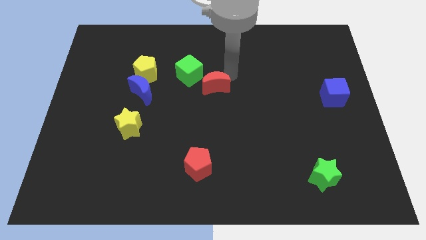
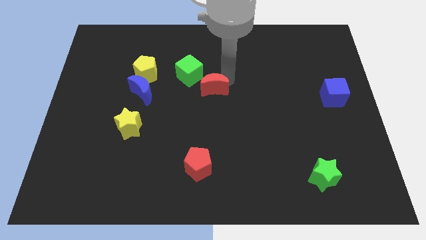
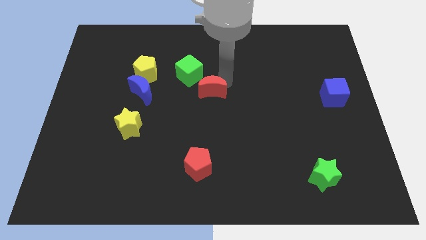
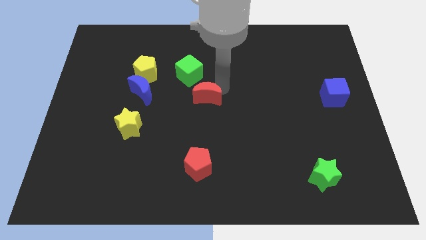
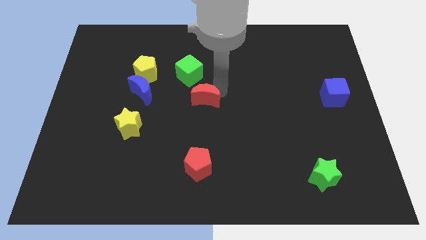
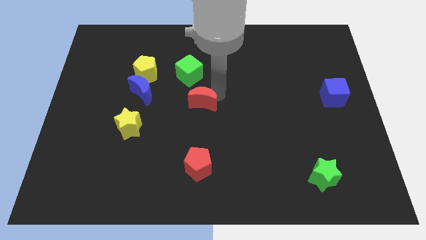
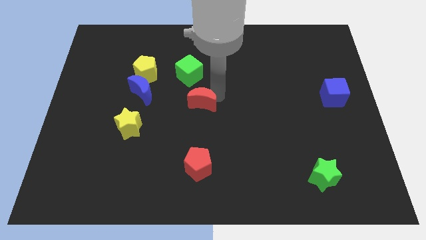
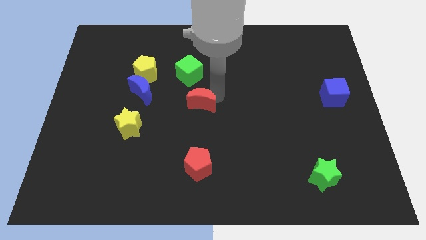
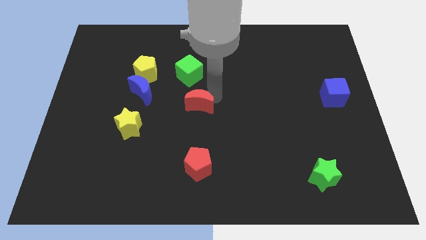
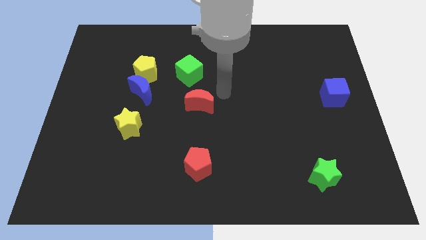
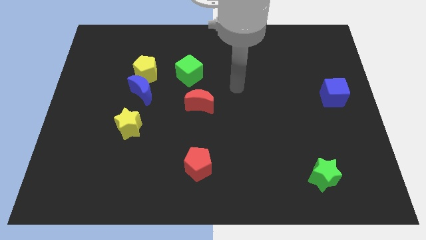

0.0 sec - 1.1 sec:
place the red moon above the red pentagon

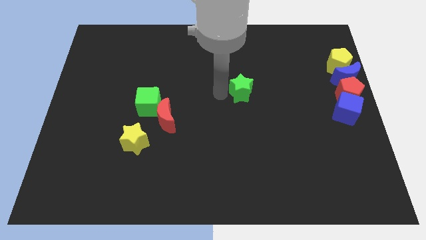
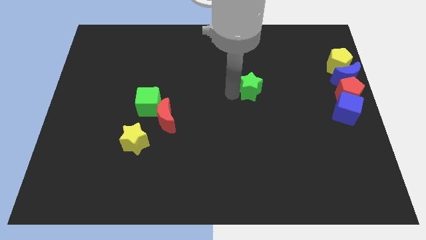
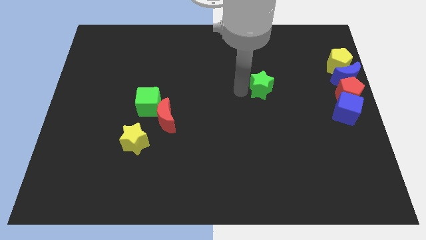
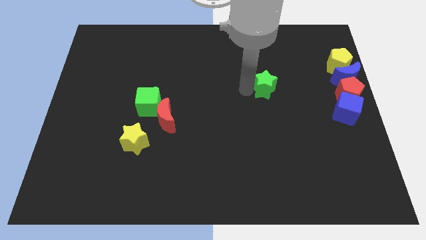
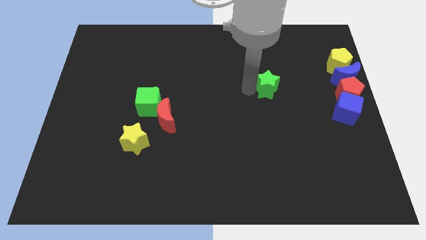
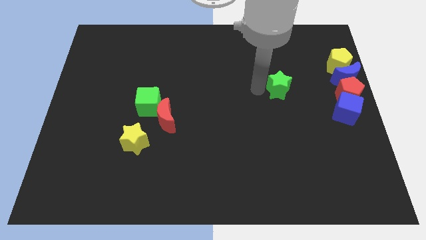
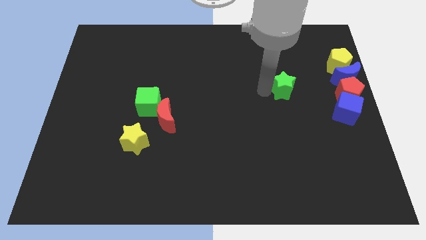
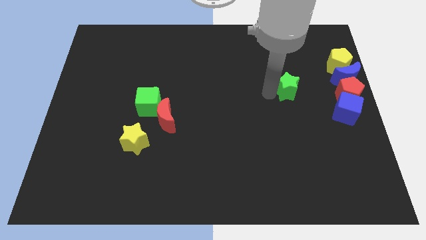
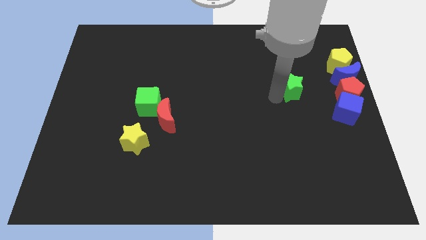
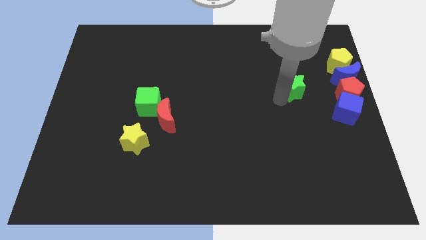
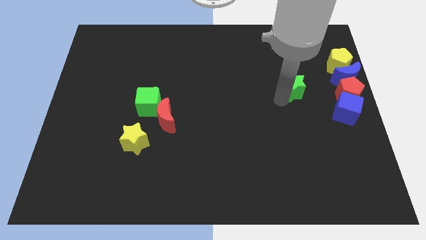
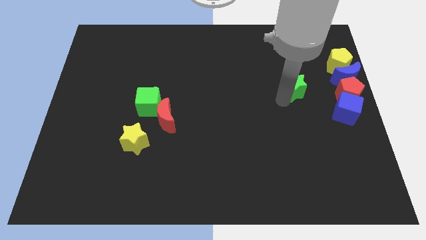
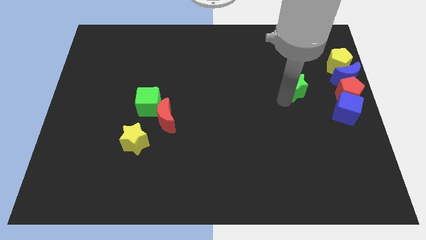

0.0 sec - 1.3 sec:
slide the green star slightly to the right

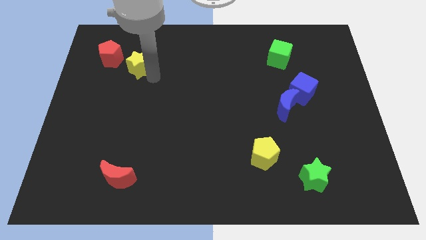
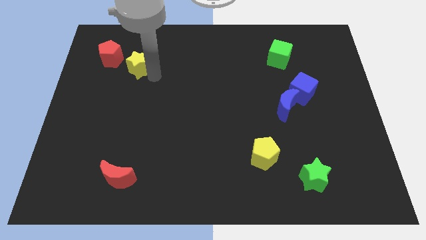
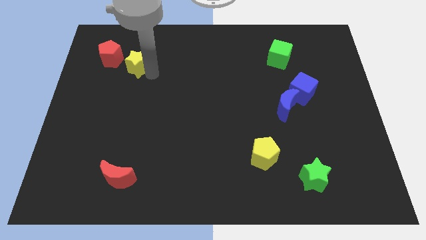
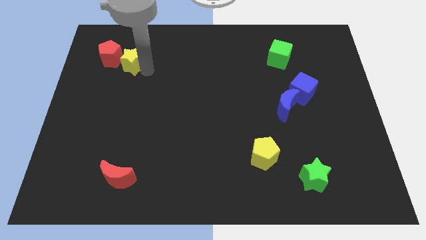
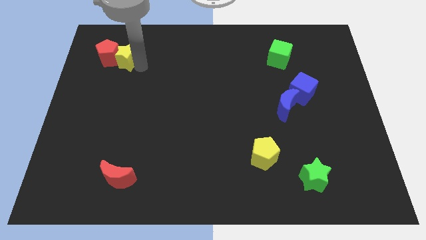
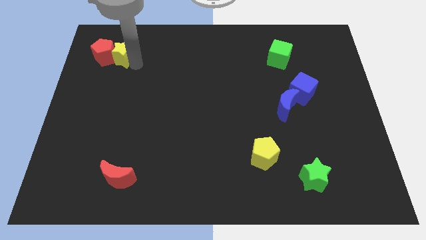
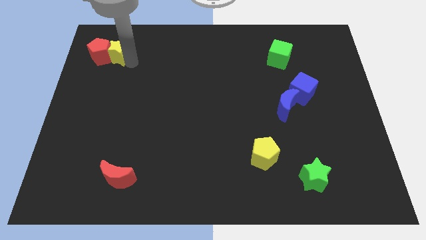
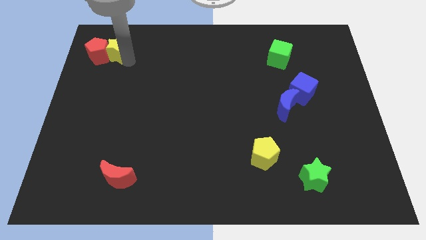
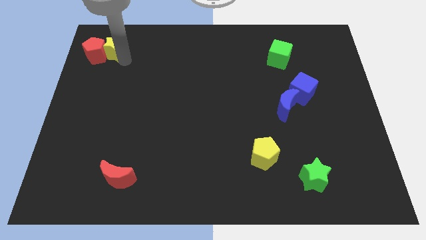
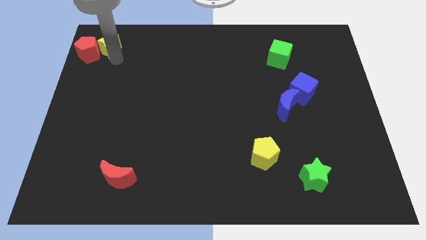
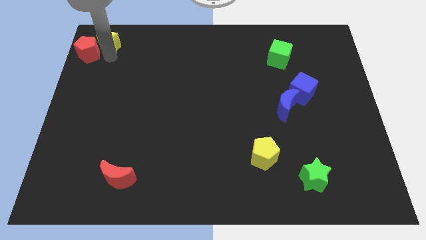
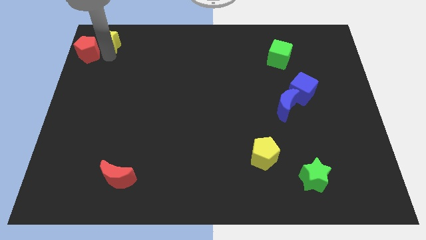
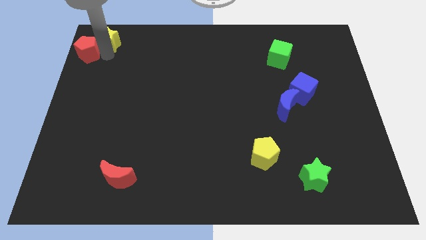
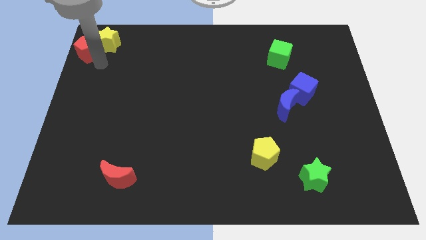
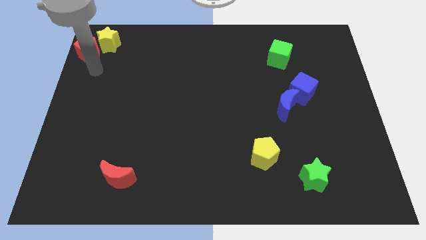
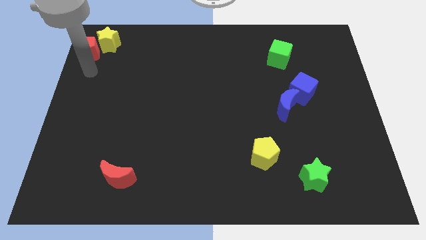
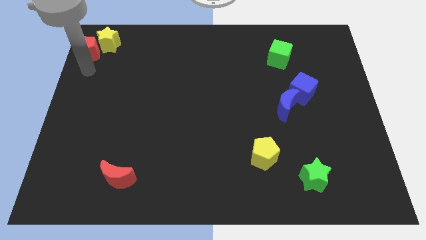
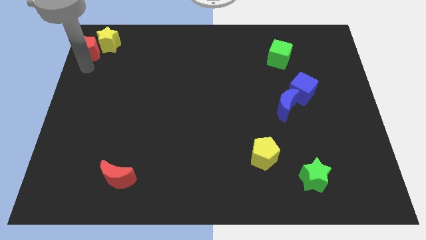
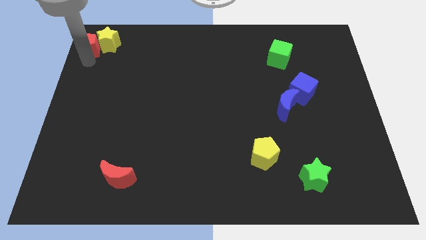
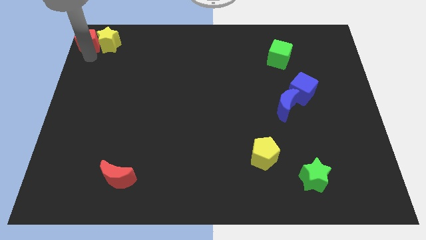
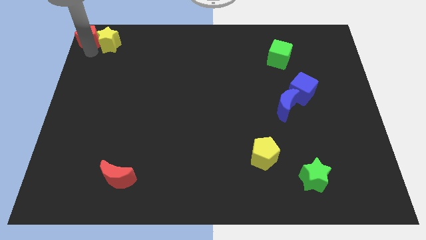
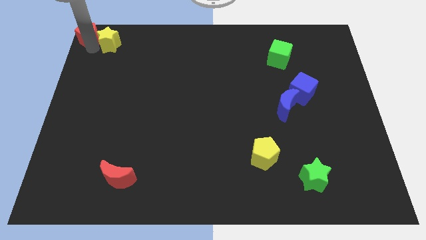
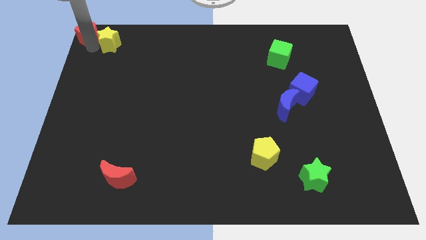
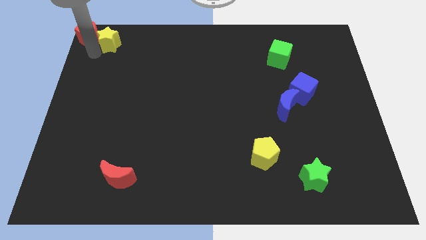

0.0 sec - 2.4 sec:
place the red pentagon at the top left corner of the board

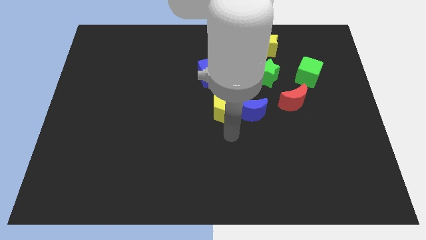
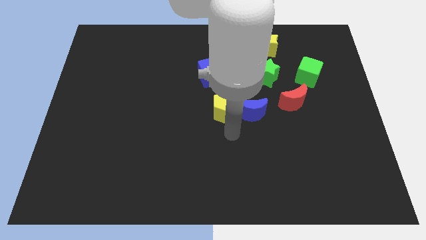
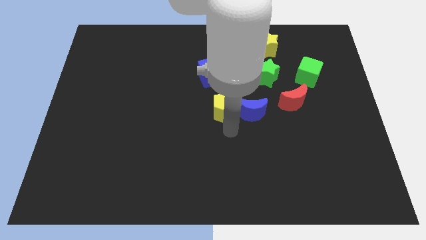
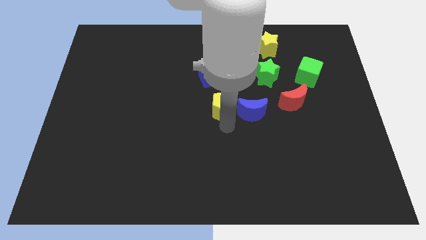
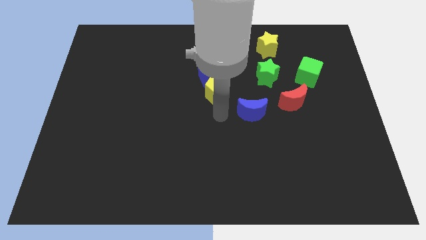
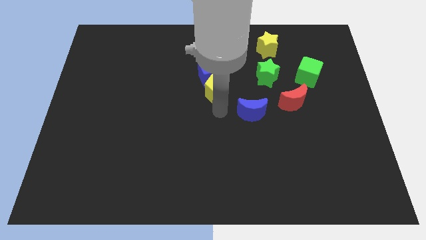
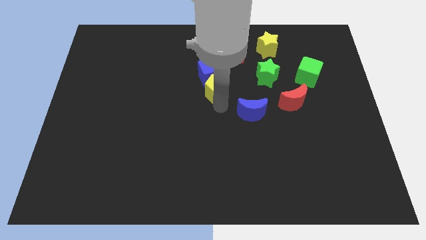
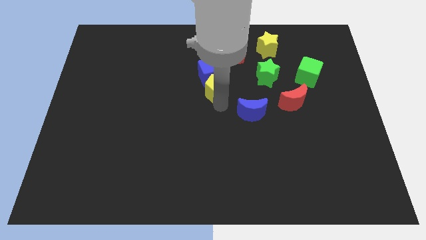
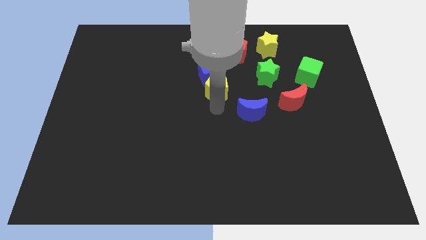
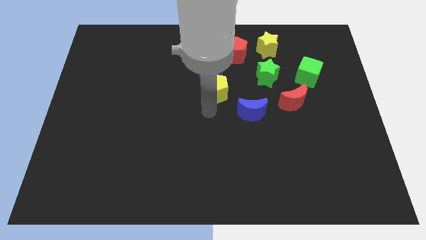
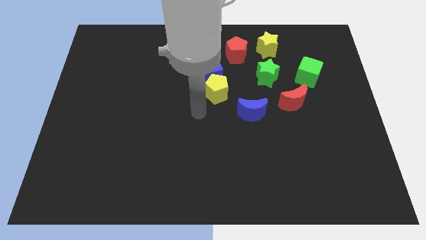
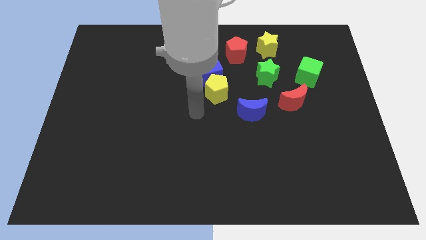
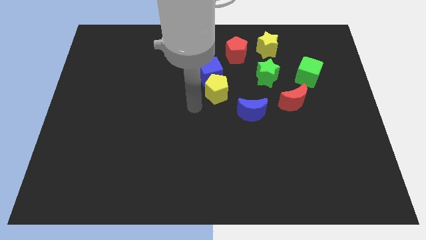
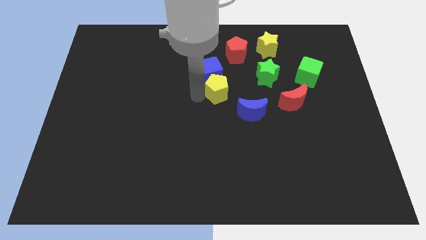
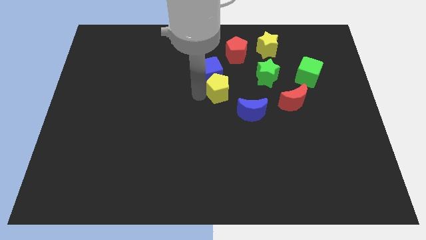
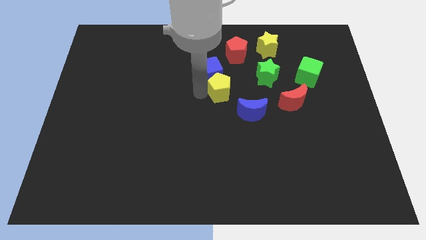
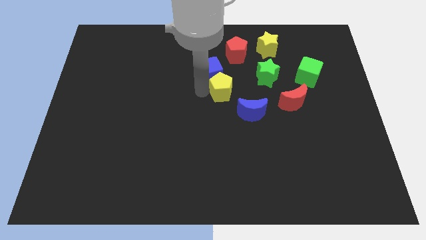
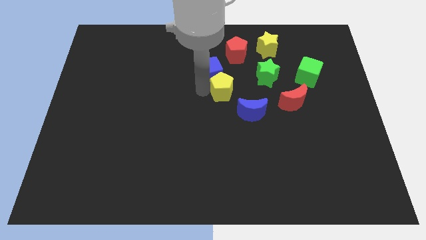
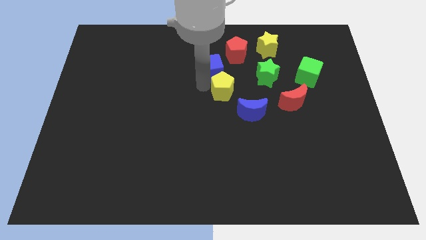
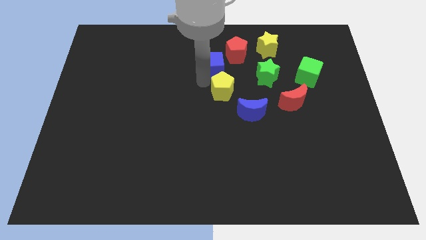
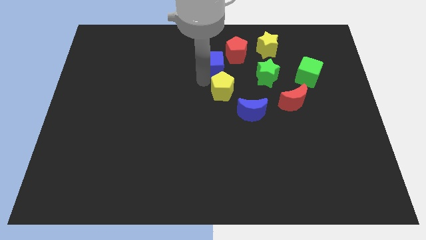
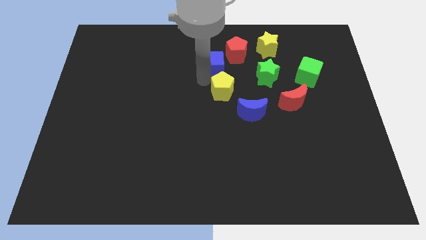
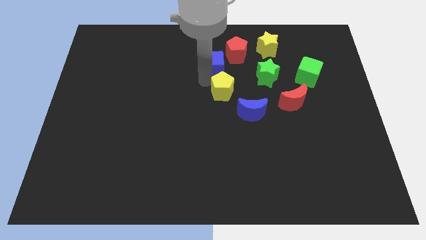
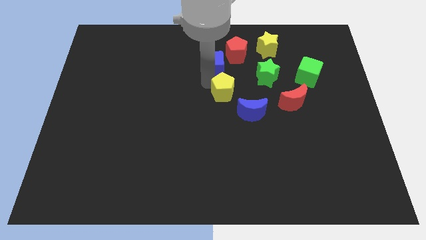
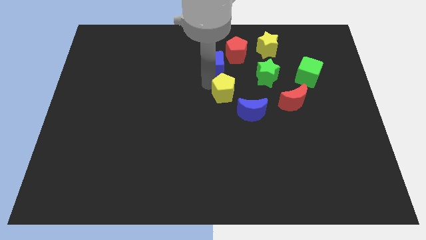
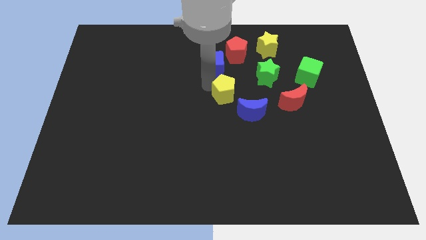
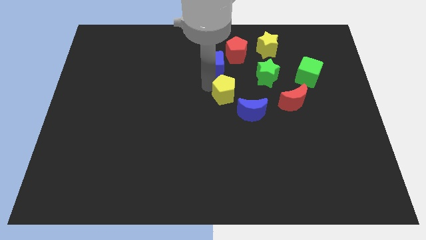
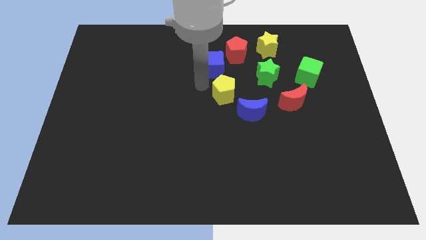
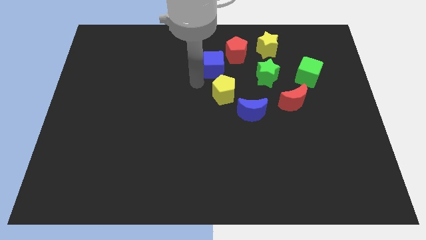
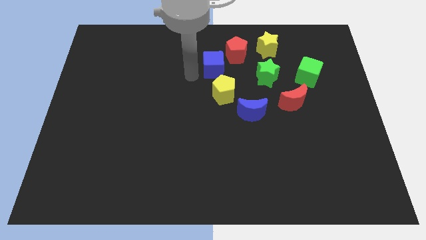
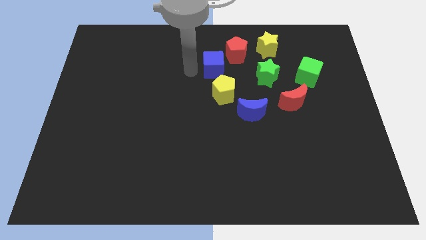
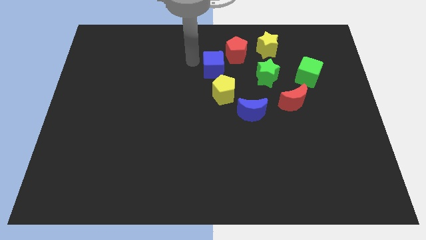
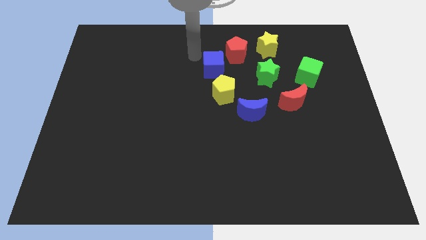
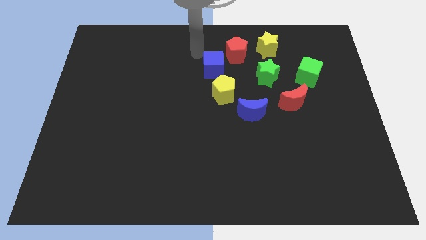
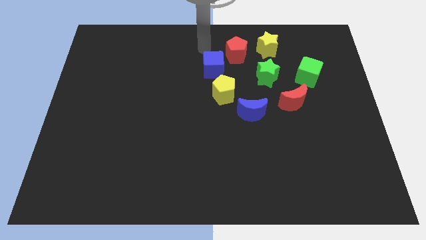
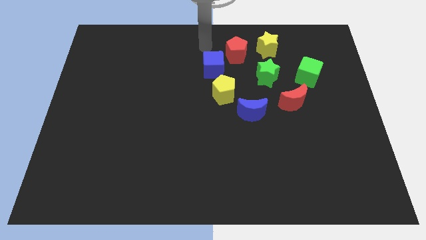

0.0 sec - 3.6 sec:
place the arm above the blue cube

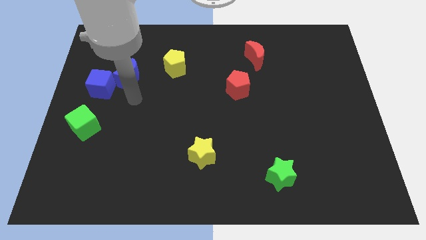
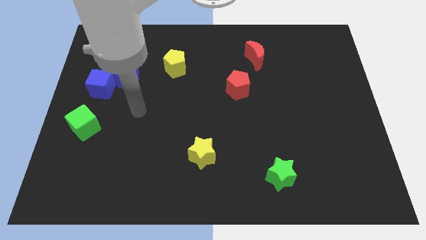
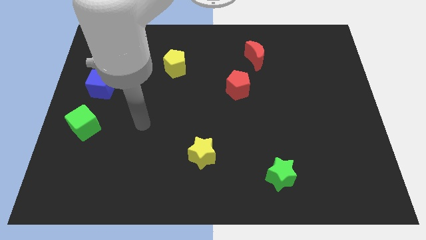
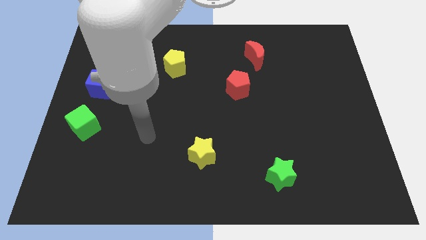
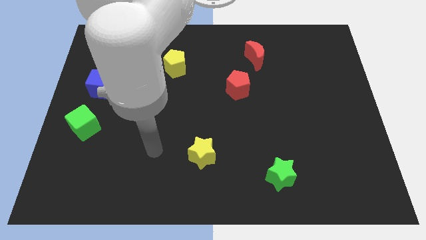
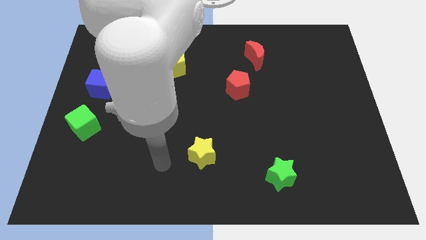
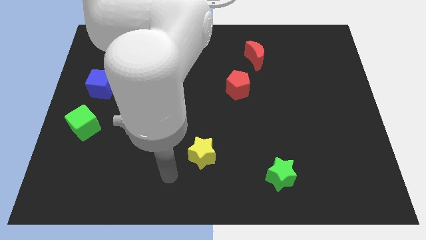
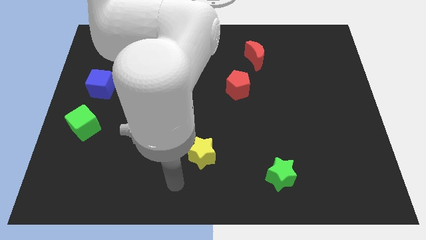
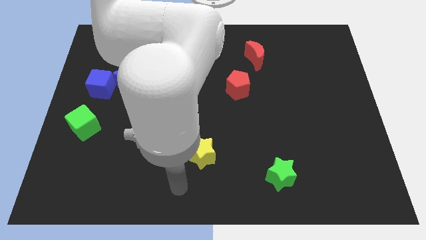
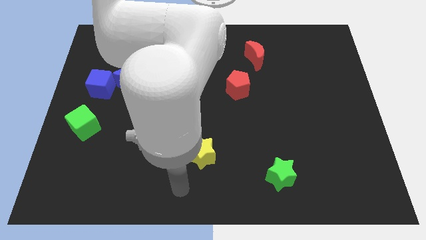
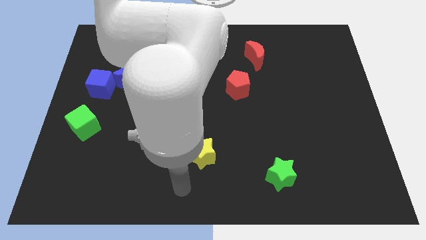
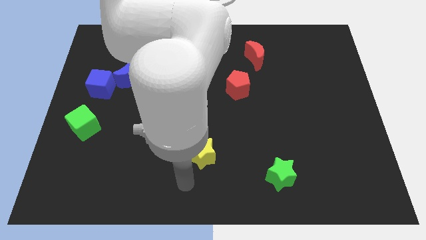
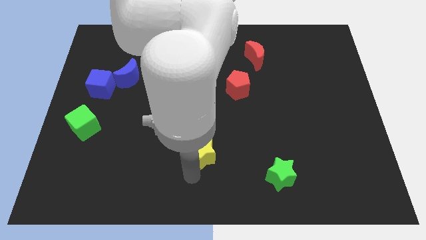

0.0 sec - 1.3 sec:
point your arm below the yellow star
